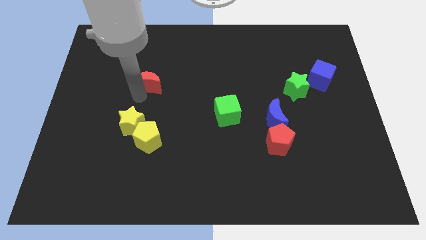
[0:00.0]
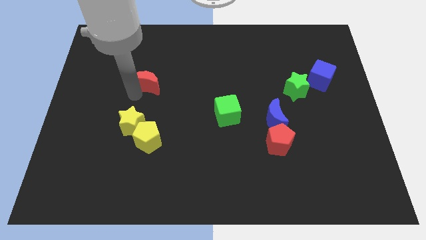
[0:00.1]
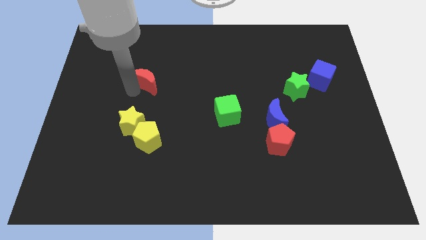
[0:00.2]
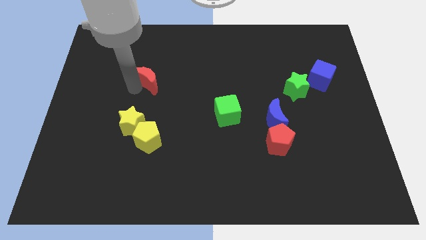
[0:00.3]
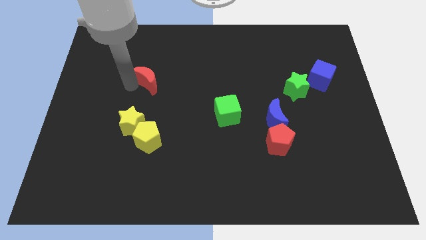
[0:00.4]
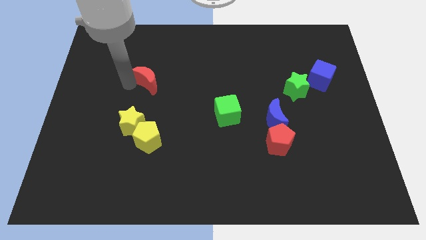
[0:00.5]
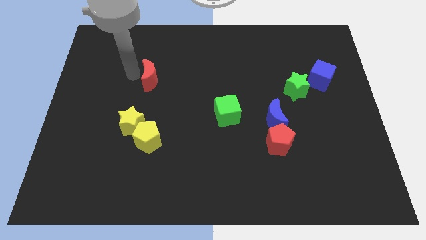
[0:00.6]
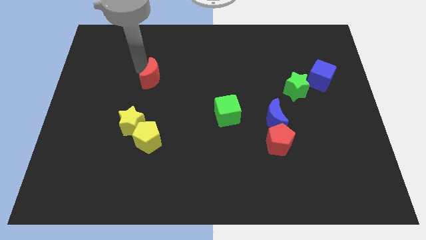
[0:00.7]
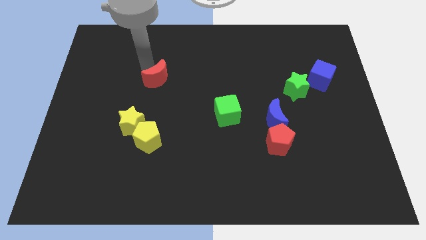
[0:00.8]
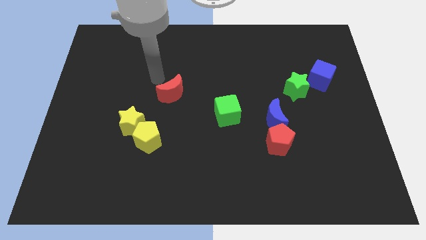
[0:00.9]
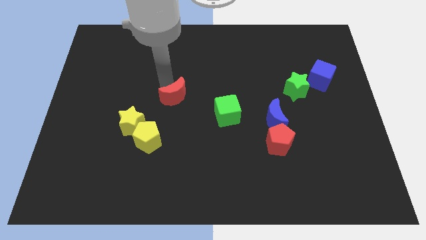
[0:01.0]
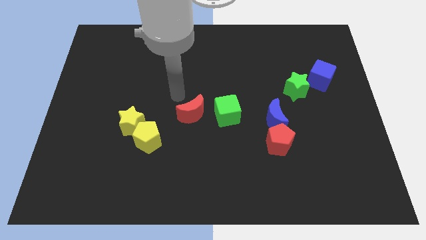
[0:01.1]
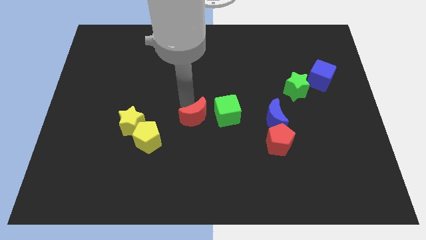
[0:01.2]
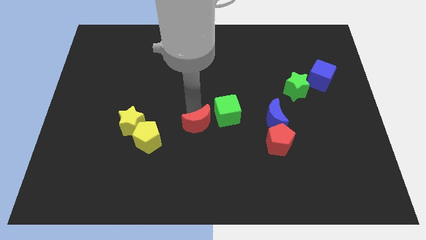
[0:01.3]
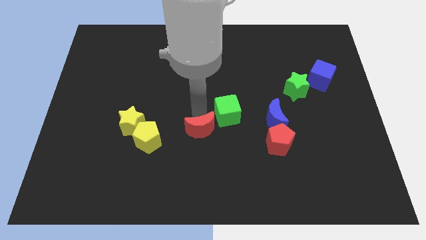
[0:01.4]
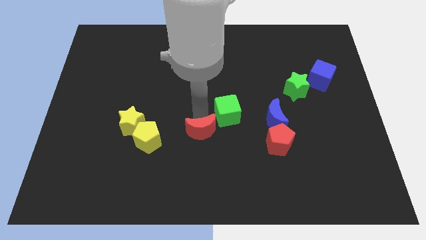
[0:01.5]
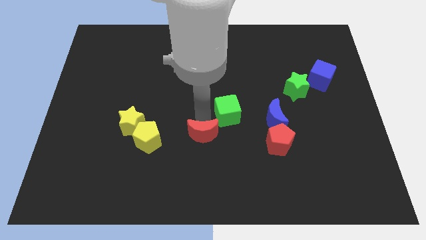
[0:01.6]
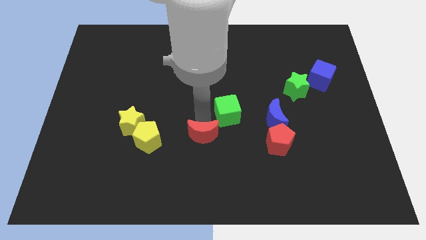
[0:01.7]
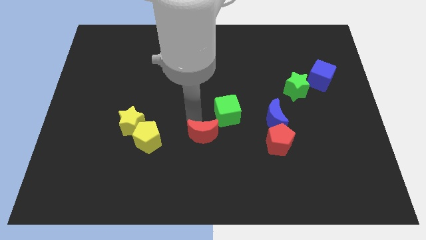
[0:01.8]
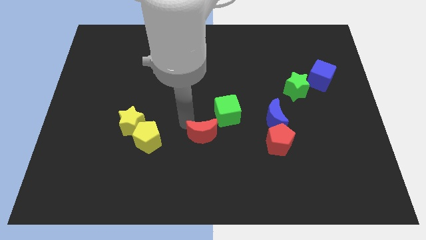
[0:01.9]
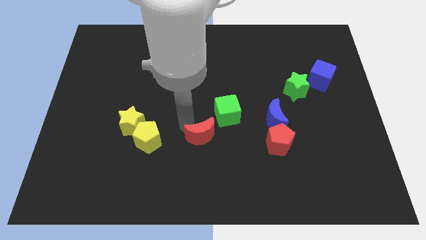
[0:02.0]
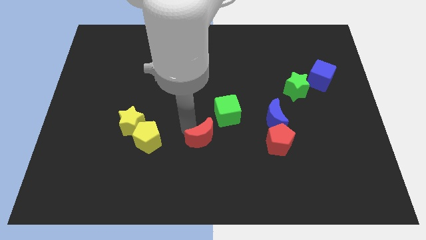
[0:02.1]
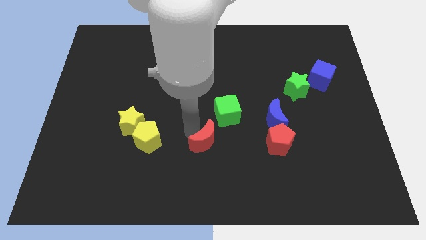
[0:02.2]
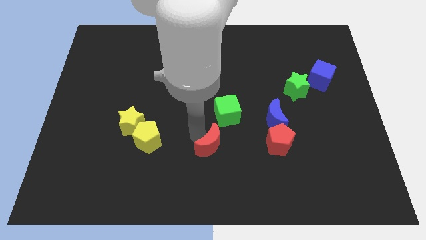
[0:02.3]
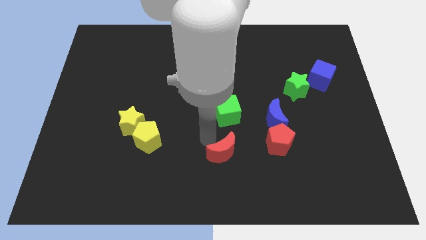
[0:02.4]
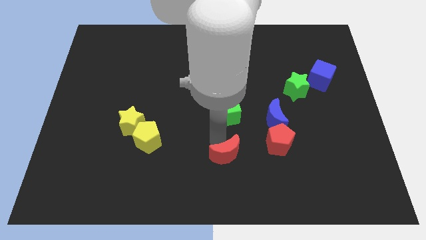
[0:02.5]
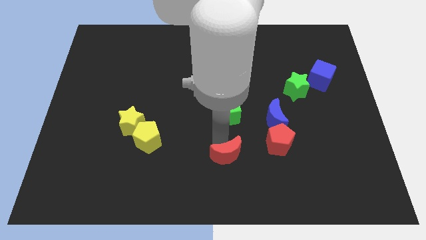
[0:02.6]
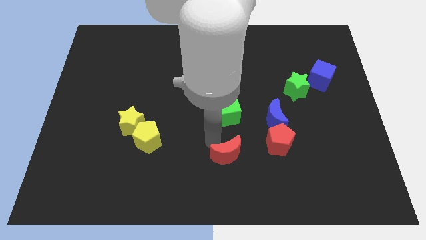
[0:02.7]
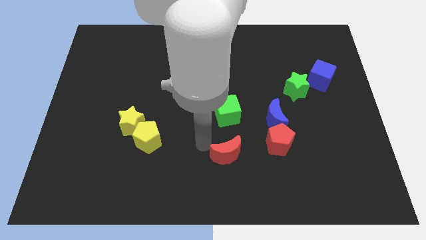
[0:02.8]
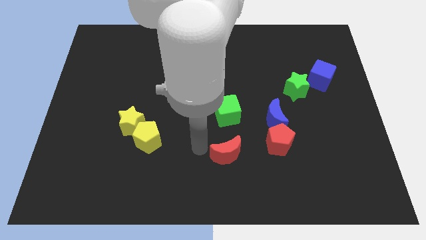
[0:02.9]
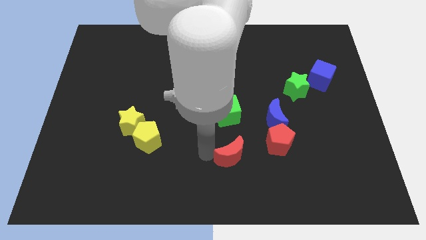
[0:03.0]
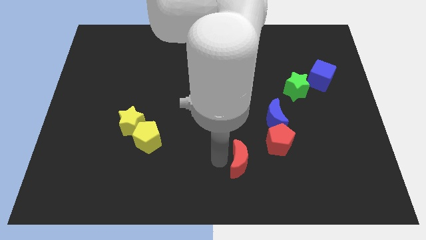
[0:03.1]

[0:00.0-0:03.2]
place the red crescent below the green cube

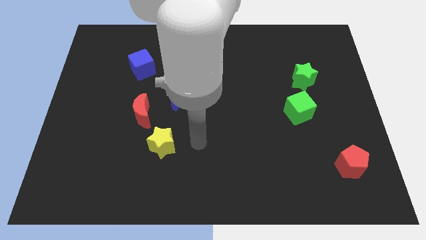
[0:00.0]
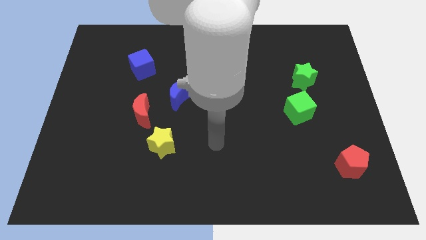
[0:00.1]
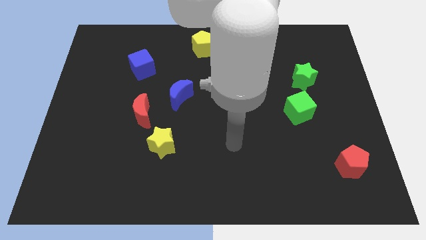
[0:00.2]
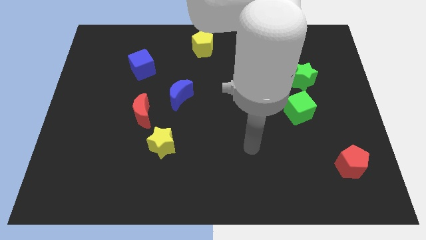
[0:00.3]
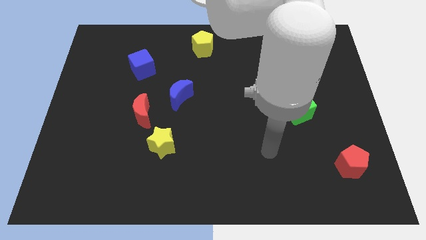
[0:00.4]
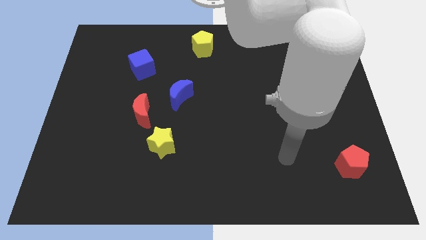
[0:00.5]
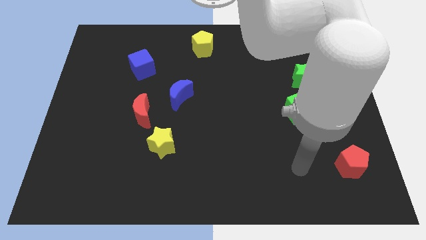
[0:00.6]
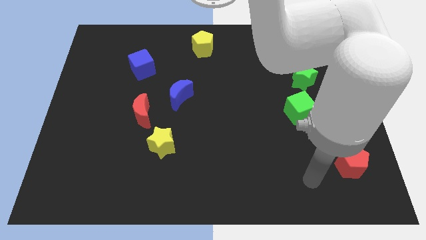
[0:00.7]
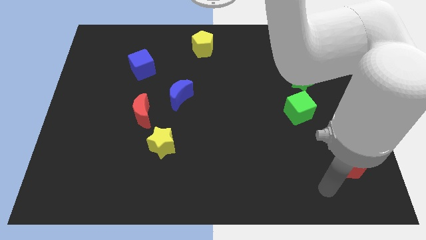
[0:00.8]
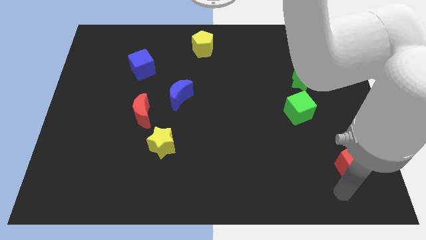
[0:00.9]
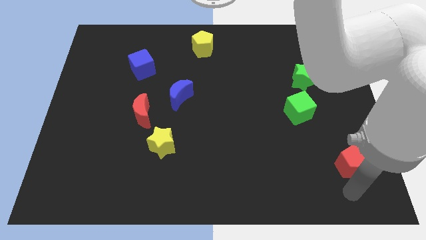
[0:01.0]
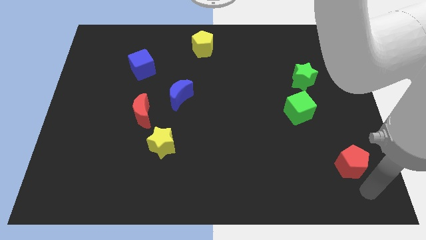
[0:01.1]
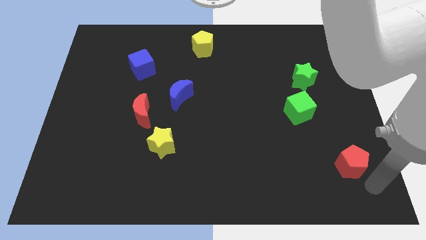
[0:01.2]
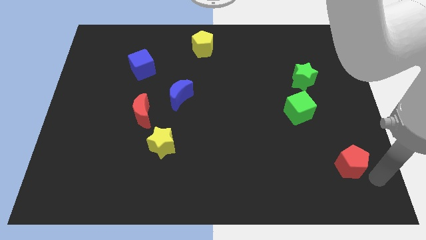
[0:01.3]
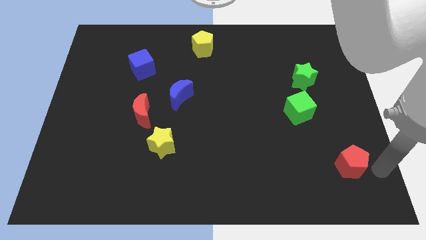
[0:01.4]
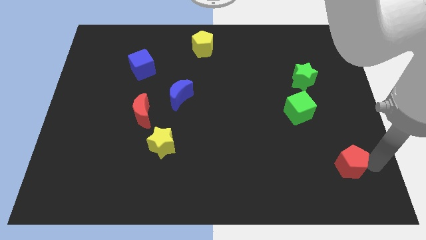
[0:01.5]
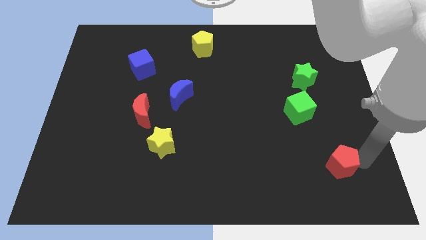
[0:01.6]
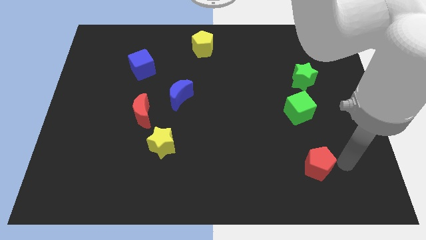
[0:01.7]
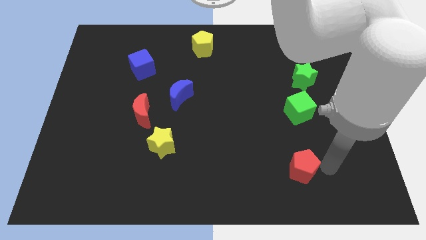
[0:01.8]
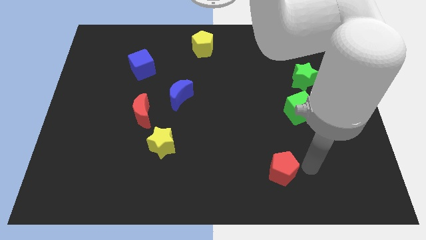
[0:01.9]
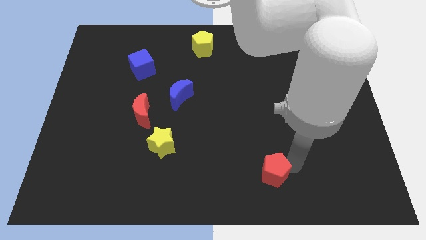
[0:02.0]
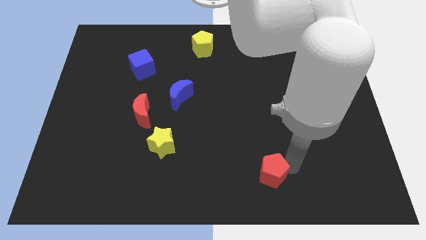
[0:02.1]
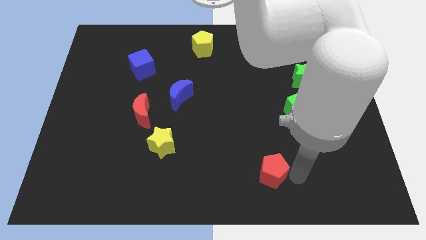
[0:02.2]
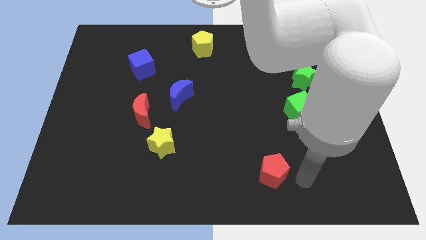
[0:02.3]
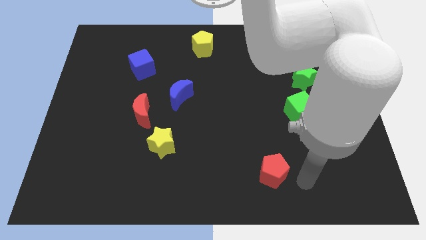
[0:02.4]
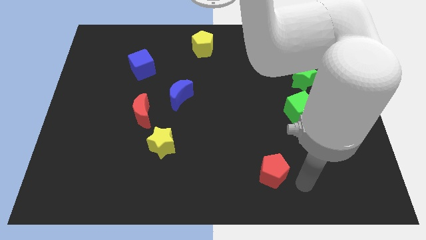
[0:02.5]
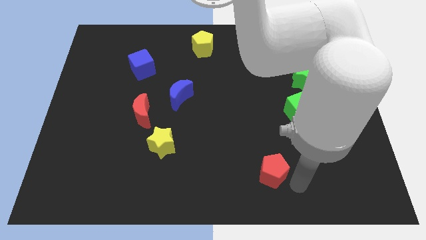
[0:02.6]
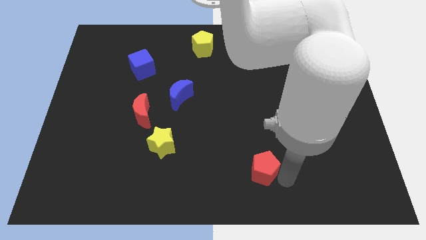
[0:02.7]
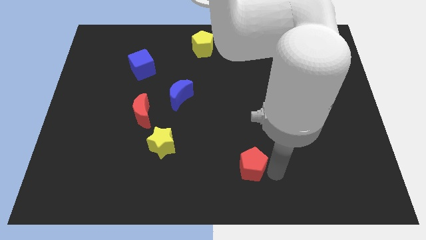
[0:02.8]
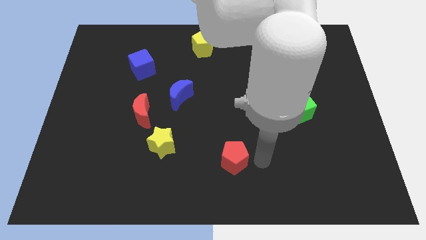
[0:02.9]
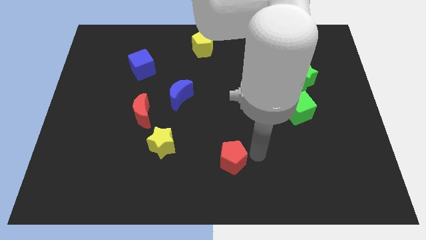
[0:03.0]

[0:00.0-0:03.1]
push the red pentagon towards left

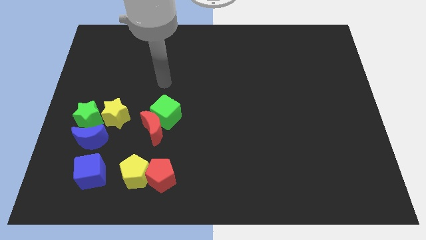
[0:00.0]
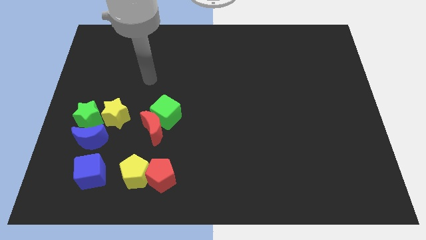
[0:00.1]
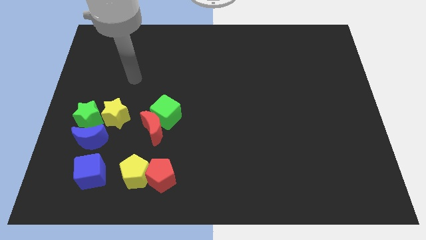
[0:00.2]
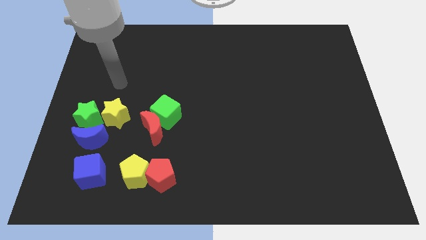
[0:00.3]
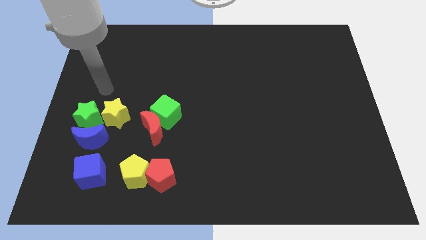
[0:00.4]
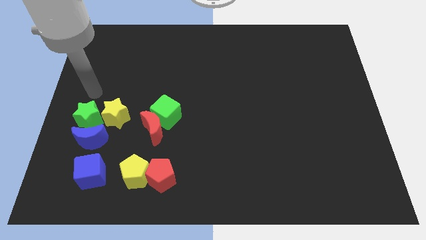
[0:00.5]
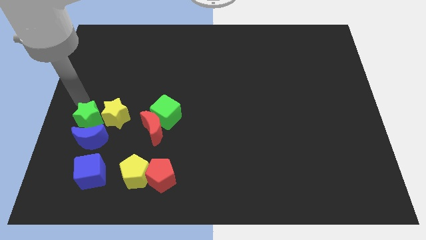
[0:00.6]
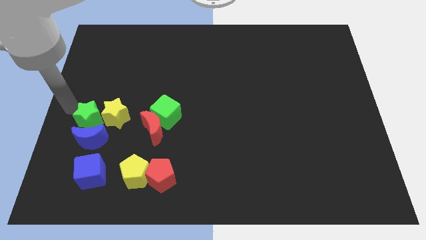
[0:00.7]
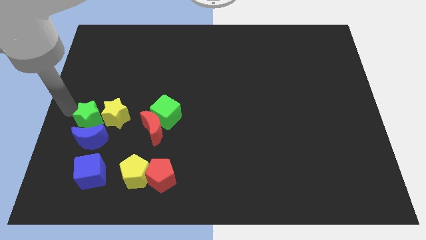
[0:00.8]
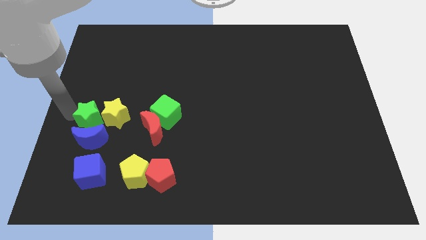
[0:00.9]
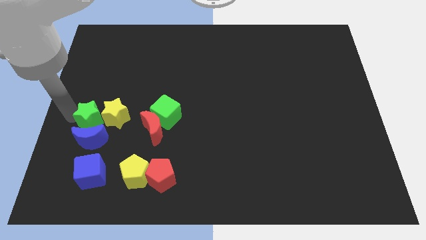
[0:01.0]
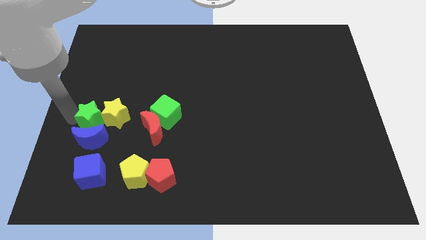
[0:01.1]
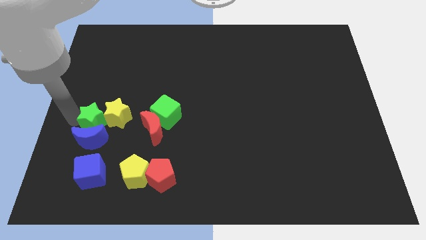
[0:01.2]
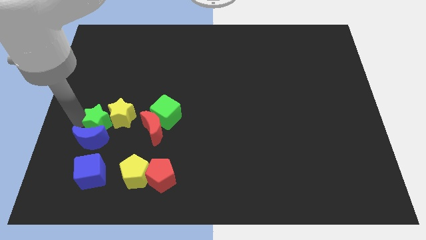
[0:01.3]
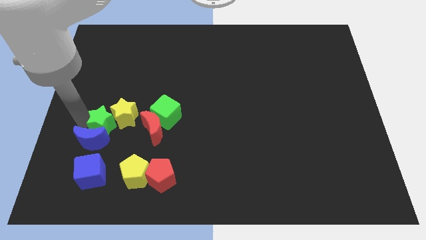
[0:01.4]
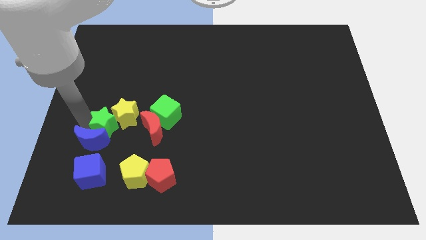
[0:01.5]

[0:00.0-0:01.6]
slide the green star slightly to the right

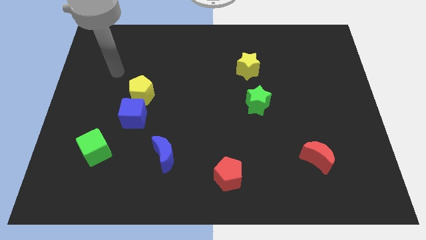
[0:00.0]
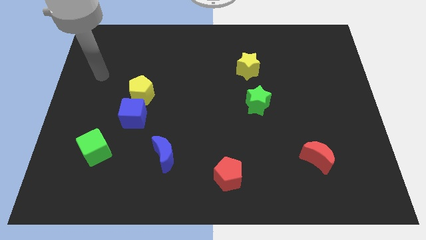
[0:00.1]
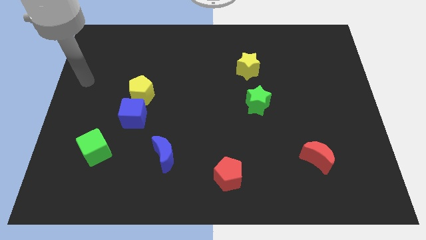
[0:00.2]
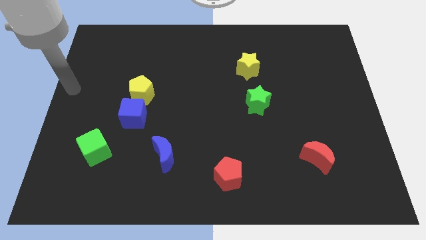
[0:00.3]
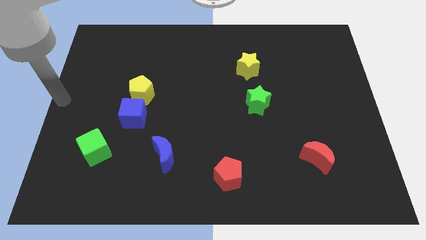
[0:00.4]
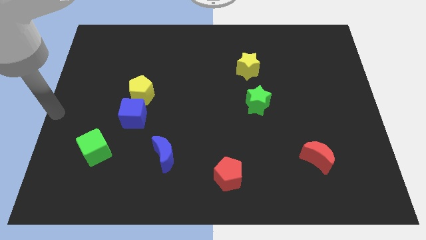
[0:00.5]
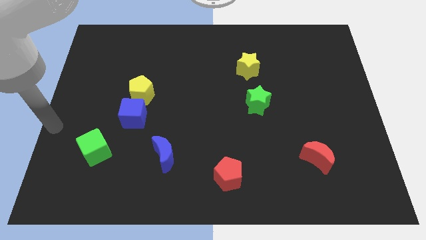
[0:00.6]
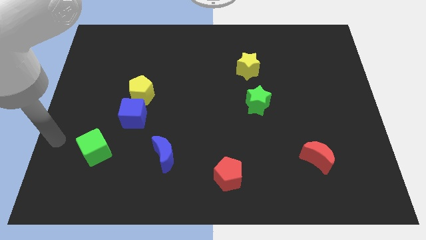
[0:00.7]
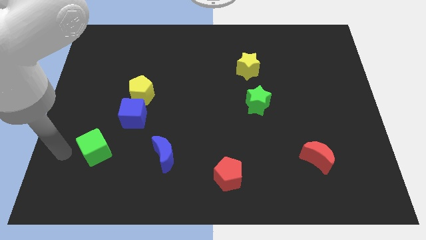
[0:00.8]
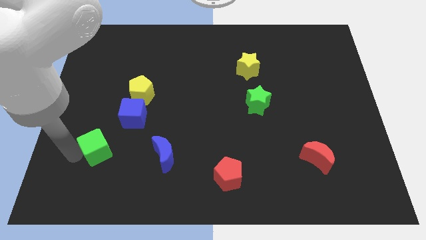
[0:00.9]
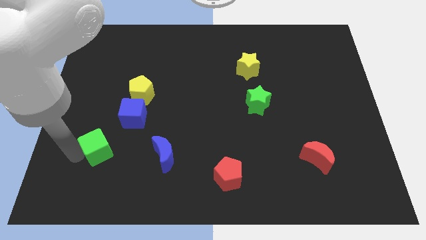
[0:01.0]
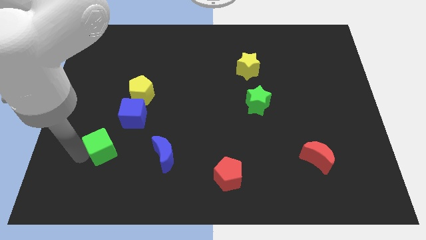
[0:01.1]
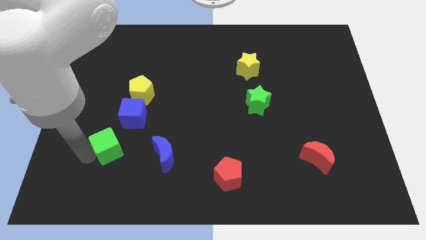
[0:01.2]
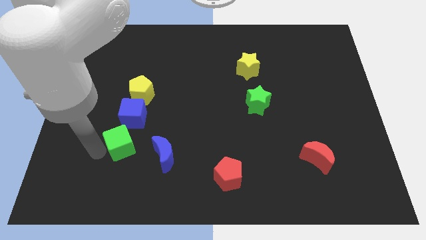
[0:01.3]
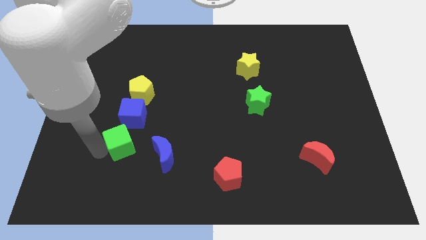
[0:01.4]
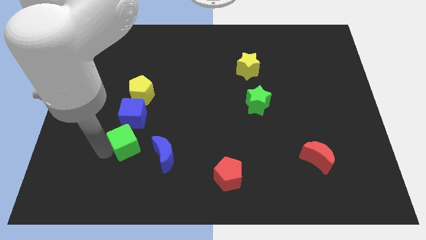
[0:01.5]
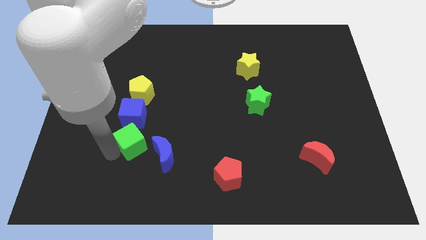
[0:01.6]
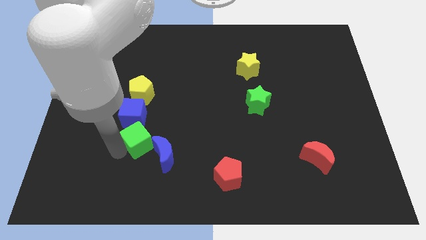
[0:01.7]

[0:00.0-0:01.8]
push the green cube to the bottom right of the blue cube
